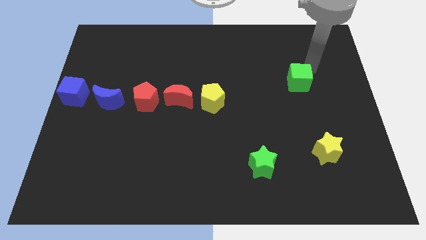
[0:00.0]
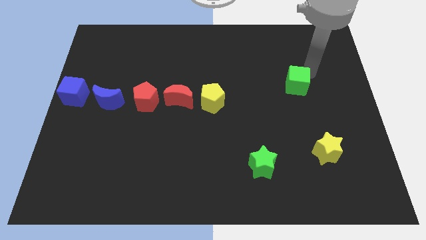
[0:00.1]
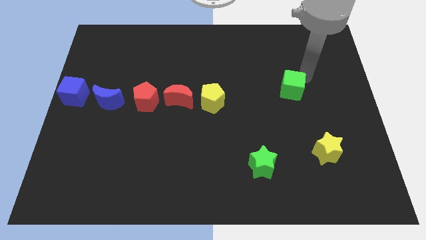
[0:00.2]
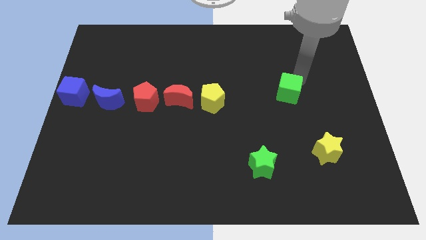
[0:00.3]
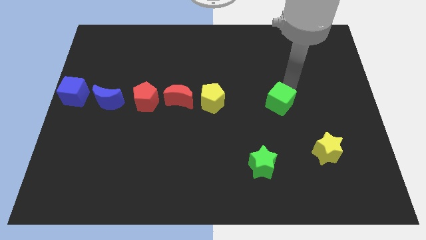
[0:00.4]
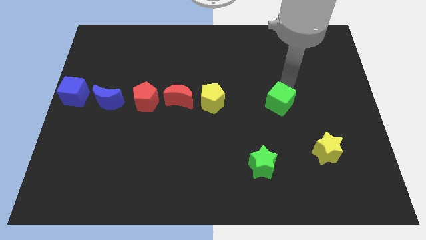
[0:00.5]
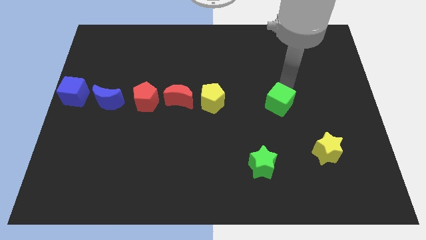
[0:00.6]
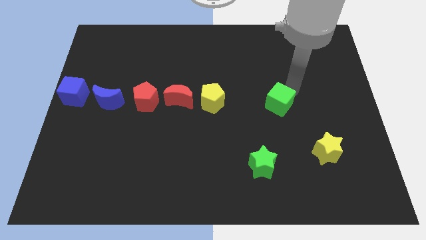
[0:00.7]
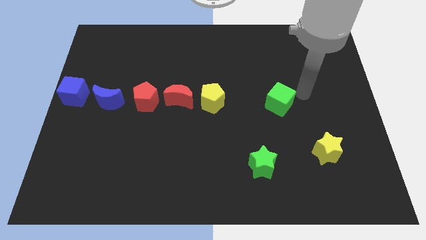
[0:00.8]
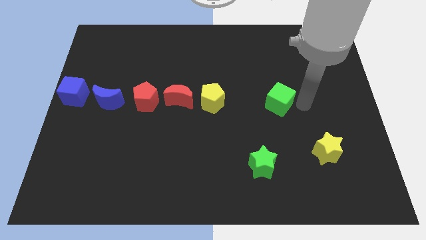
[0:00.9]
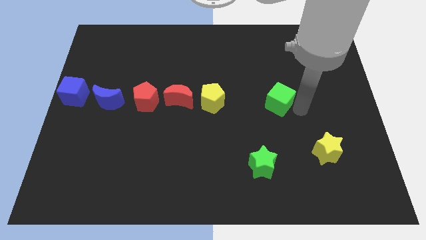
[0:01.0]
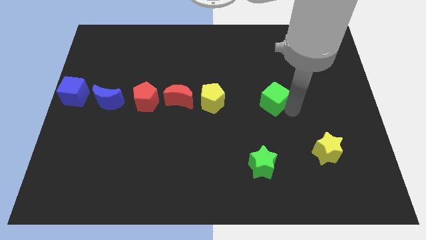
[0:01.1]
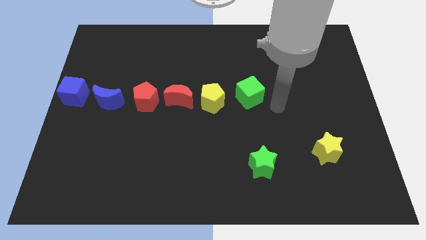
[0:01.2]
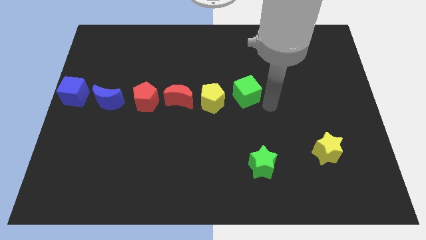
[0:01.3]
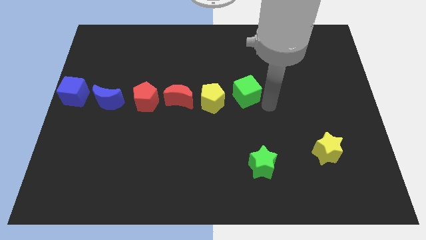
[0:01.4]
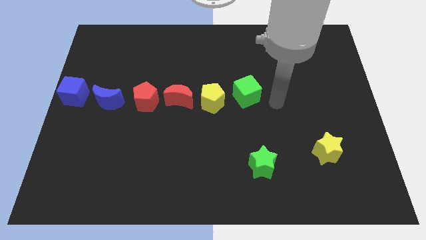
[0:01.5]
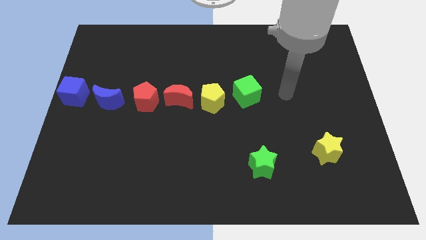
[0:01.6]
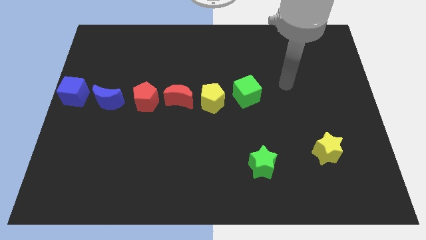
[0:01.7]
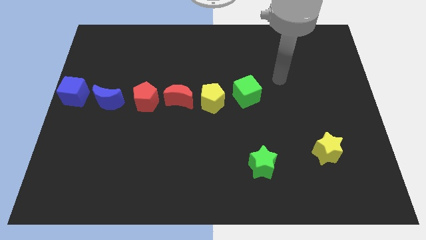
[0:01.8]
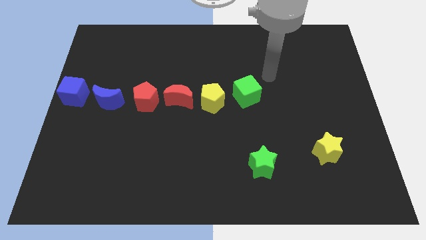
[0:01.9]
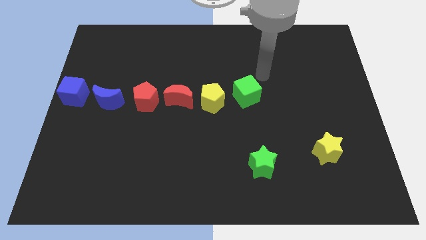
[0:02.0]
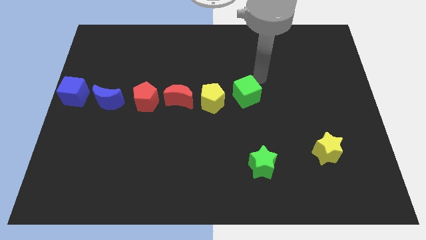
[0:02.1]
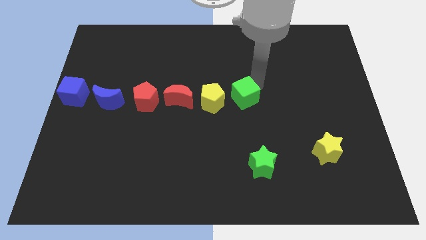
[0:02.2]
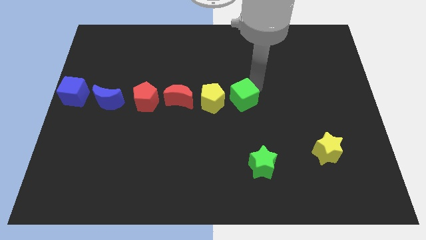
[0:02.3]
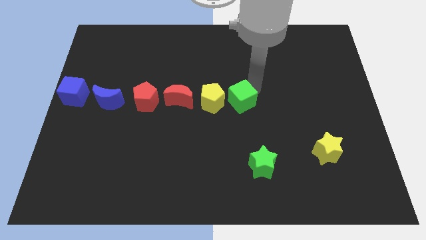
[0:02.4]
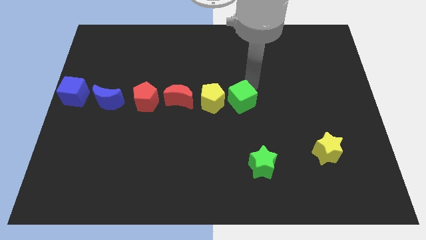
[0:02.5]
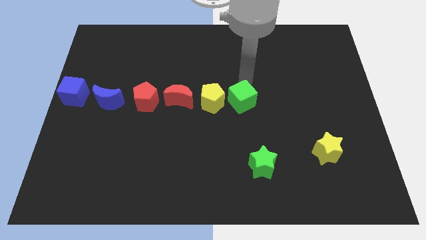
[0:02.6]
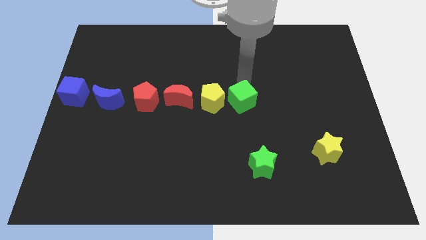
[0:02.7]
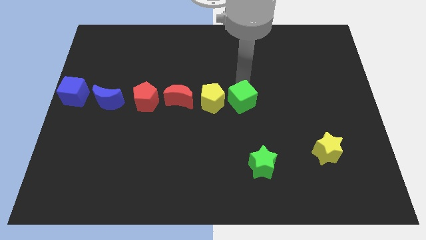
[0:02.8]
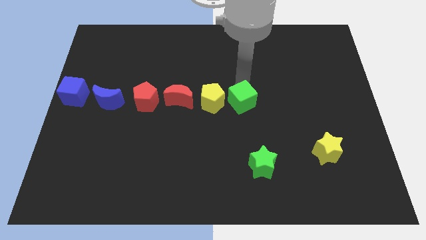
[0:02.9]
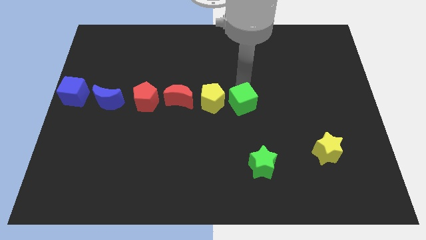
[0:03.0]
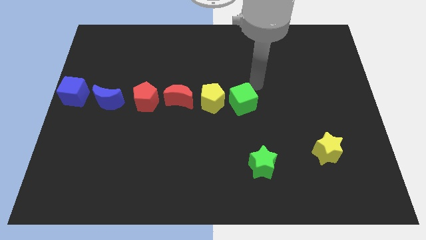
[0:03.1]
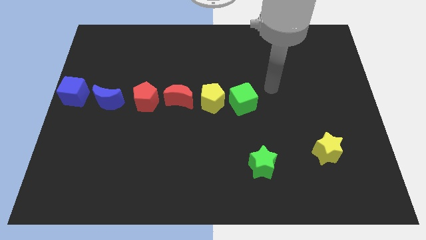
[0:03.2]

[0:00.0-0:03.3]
place the green cube to the right side of the yellow pentagon

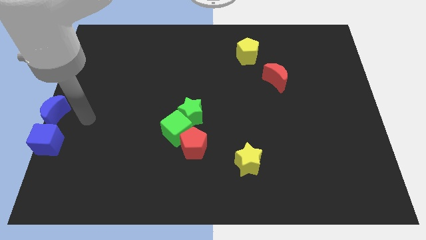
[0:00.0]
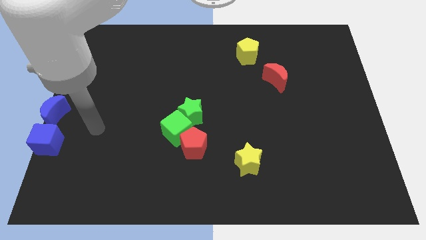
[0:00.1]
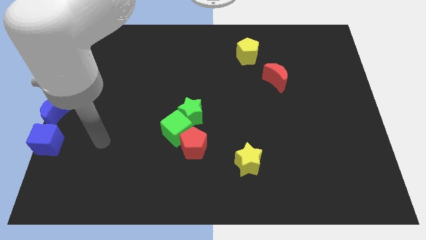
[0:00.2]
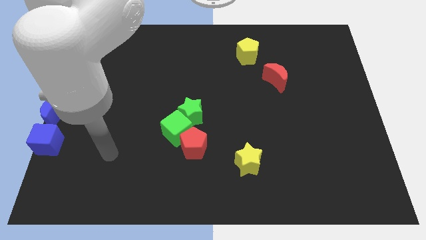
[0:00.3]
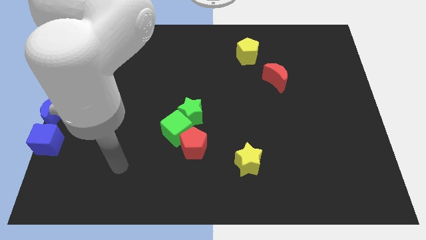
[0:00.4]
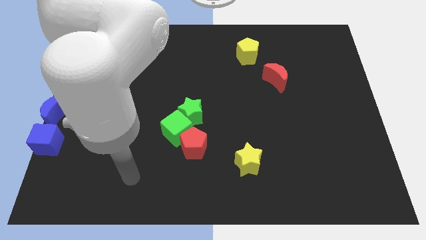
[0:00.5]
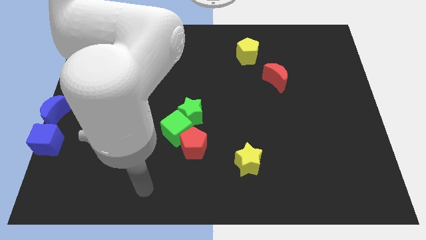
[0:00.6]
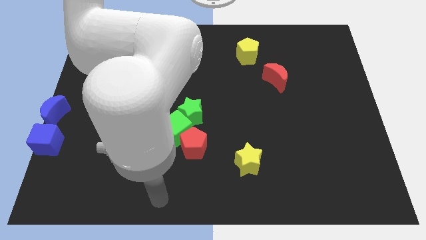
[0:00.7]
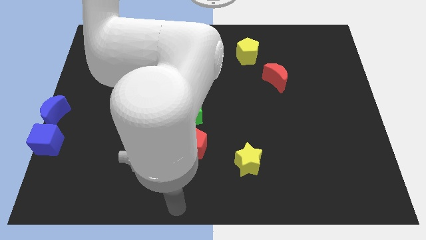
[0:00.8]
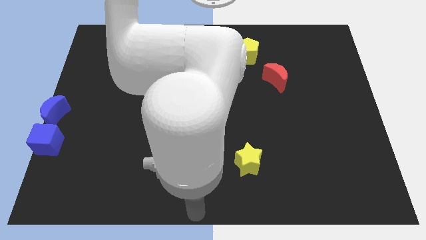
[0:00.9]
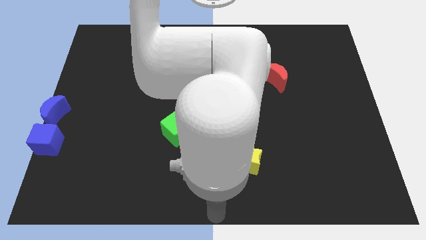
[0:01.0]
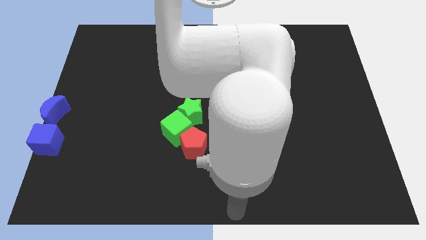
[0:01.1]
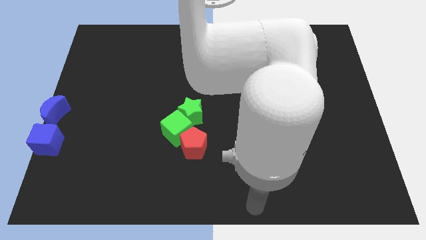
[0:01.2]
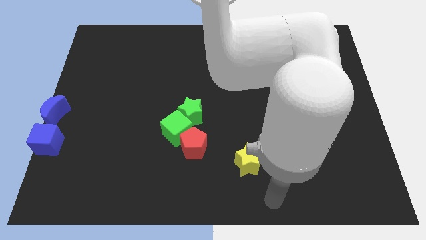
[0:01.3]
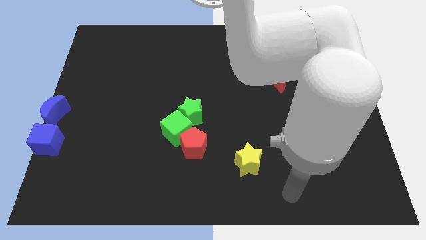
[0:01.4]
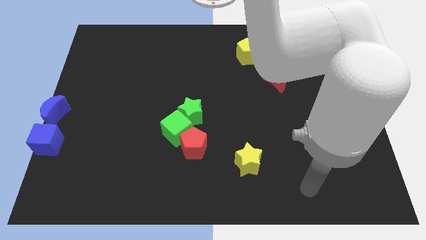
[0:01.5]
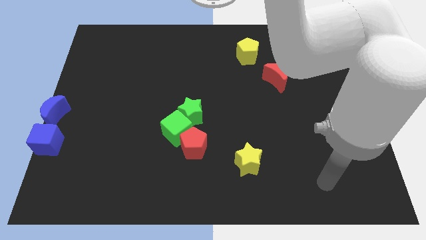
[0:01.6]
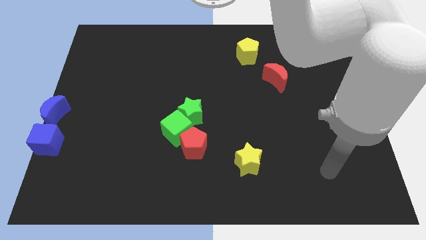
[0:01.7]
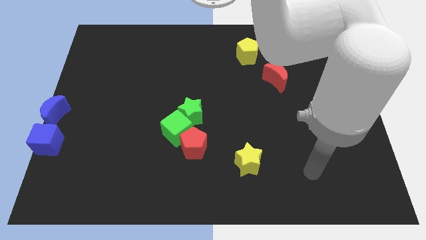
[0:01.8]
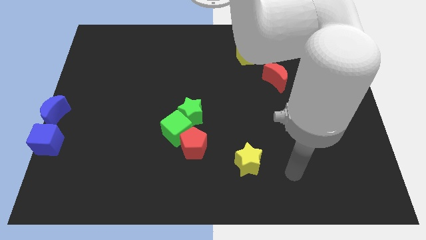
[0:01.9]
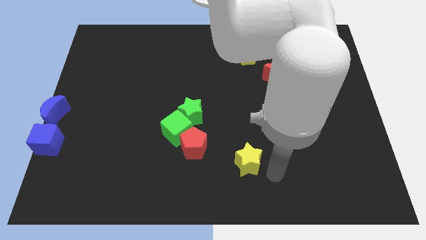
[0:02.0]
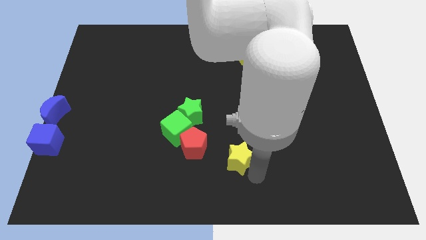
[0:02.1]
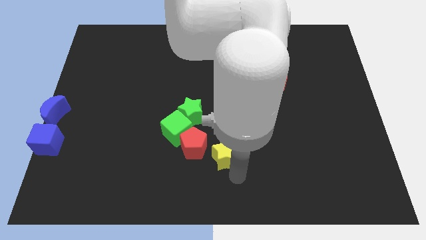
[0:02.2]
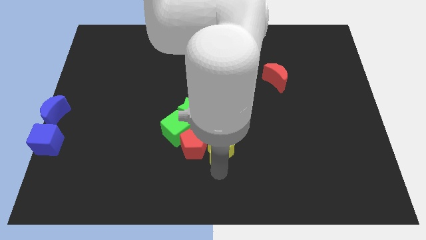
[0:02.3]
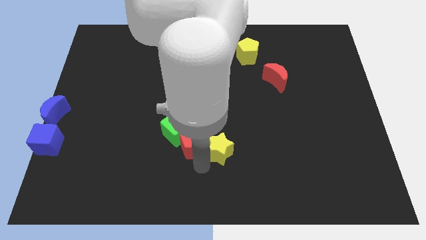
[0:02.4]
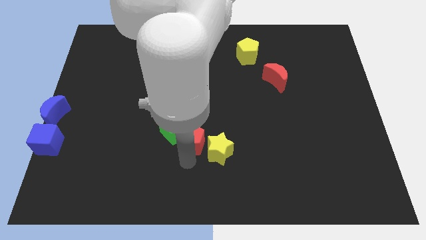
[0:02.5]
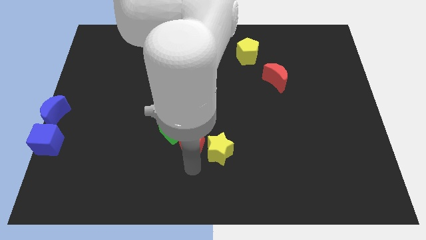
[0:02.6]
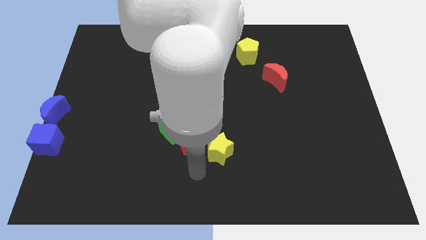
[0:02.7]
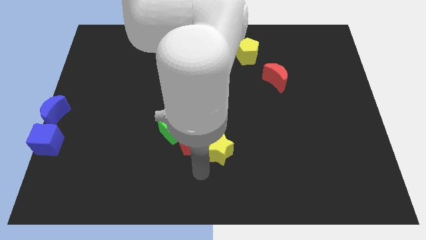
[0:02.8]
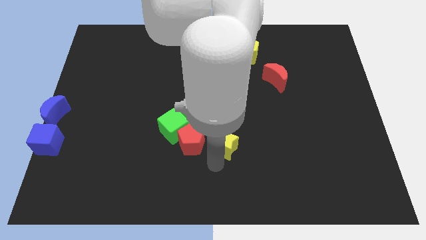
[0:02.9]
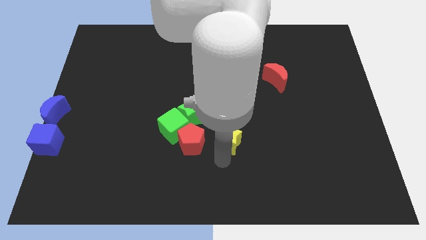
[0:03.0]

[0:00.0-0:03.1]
move the yellow star right to the red pentagon

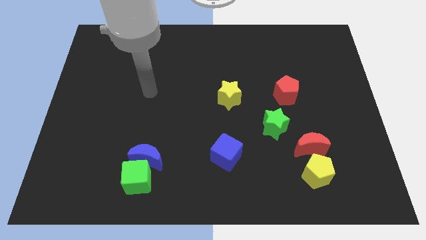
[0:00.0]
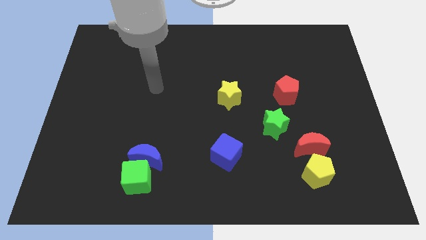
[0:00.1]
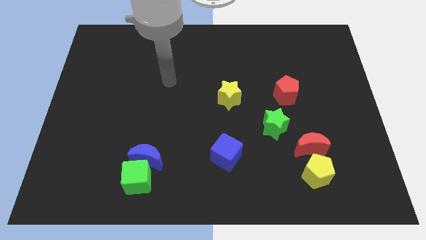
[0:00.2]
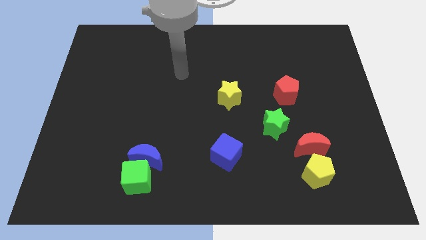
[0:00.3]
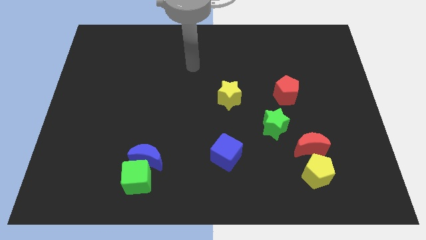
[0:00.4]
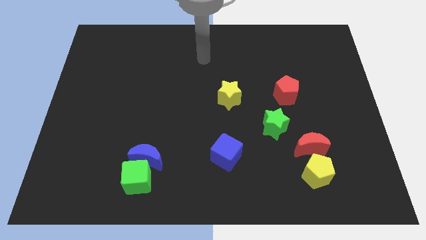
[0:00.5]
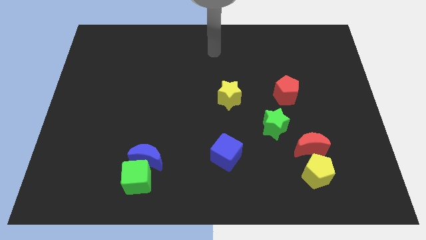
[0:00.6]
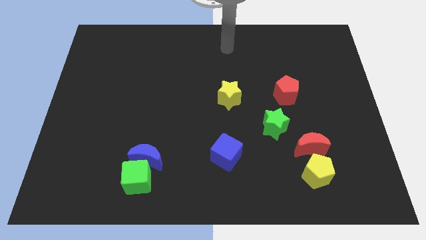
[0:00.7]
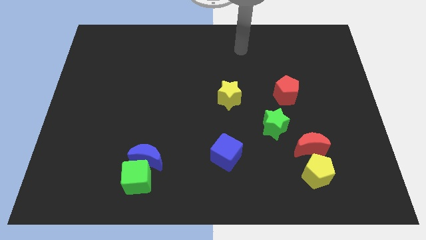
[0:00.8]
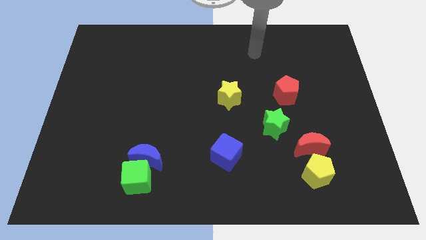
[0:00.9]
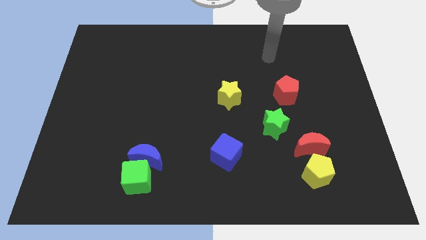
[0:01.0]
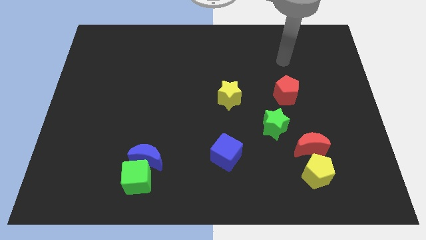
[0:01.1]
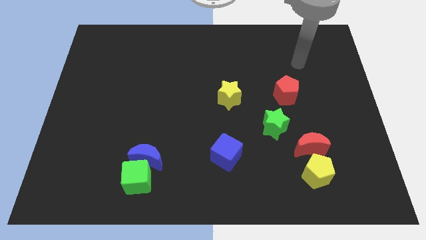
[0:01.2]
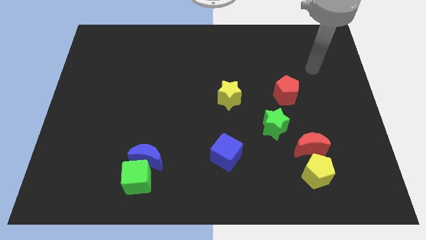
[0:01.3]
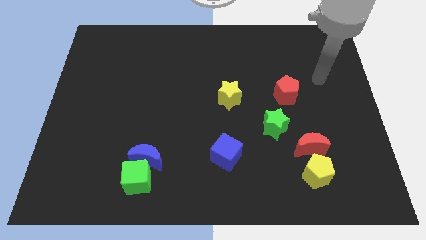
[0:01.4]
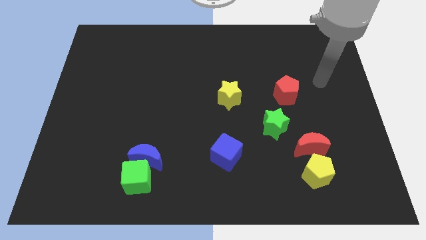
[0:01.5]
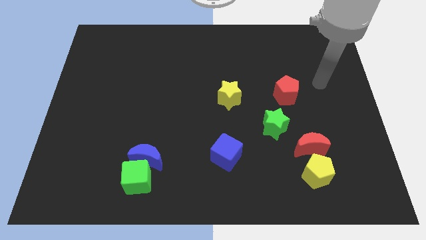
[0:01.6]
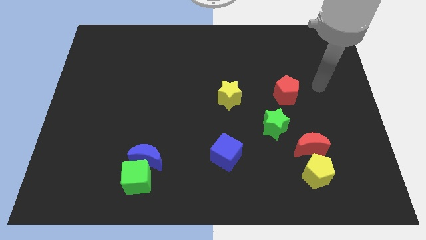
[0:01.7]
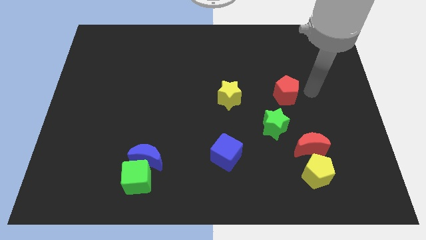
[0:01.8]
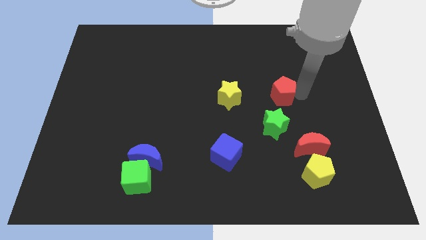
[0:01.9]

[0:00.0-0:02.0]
move your arm to the right side of the red pentagon

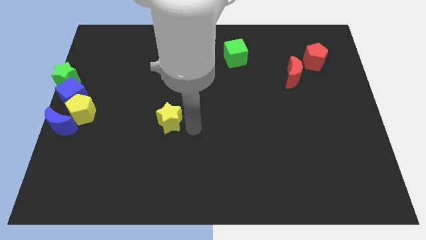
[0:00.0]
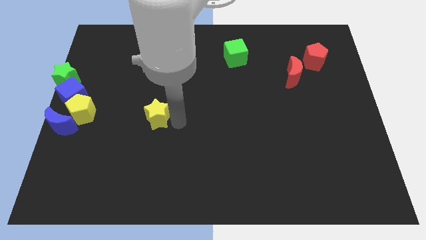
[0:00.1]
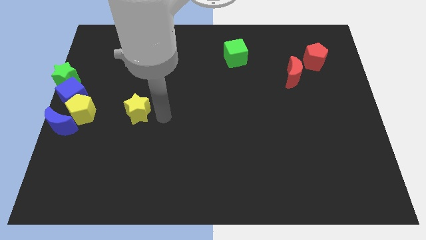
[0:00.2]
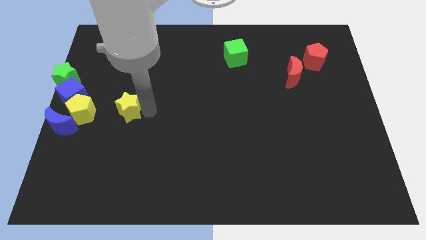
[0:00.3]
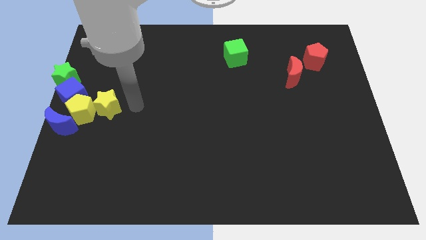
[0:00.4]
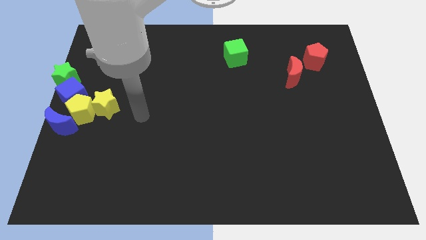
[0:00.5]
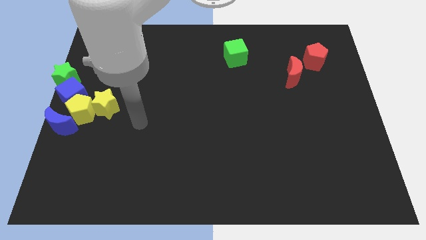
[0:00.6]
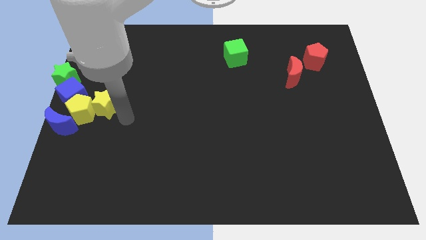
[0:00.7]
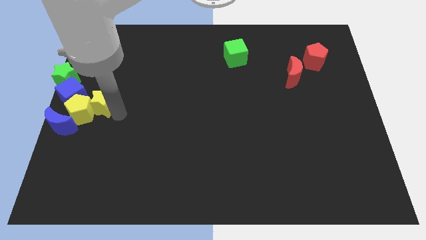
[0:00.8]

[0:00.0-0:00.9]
push the yellow star into the yellow pentagon
